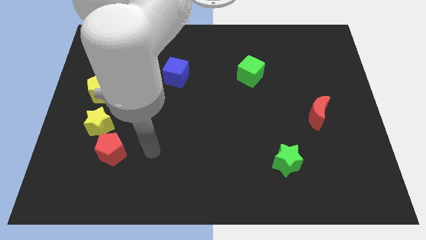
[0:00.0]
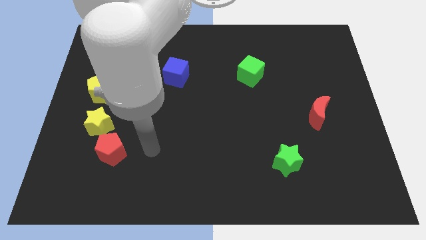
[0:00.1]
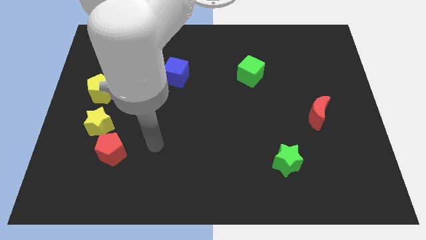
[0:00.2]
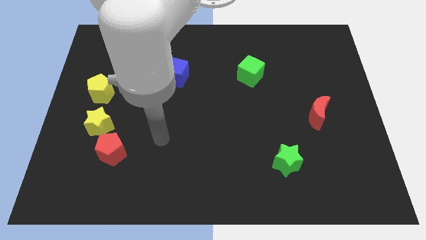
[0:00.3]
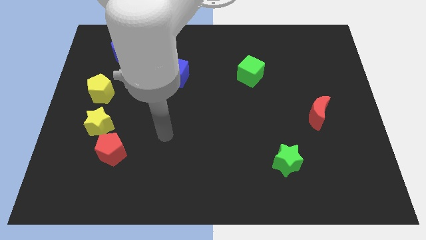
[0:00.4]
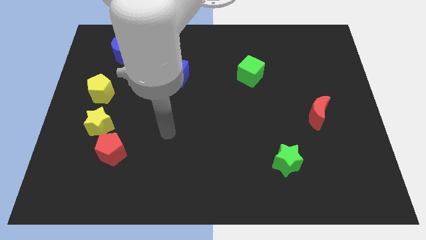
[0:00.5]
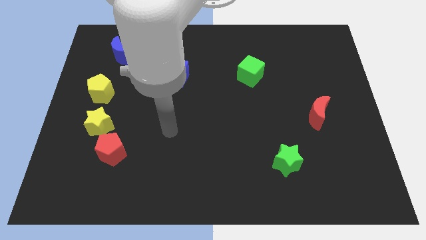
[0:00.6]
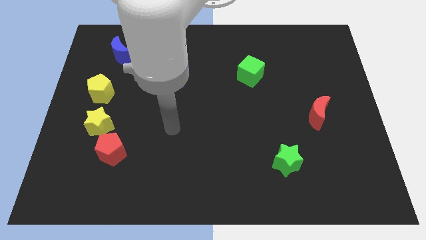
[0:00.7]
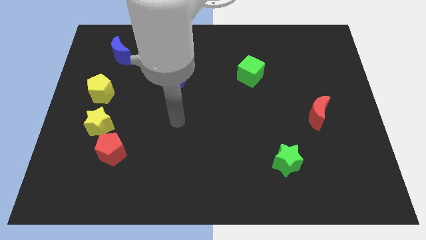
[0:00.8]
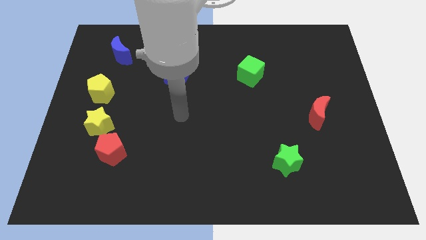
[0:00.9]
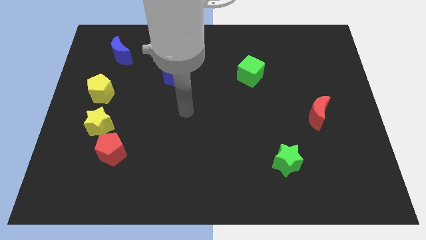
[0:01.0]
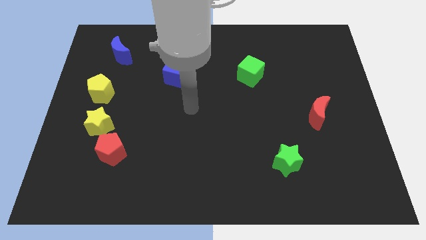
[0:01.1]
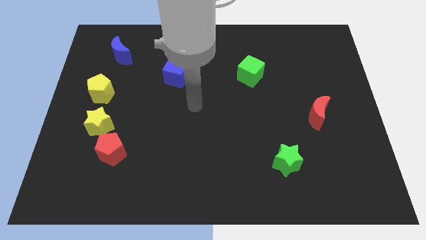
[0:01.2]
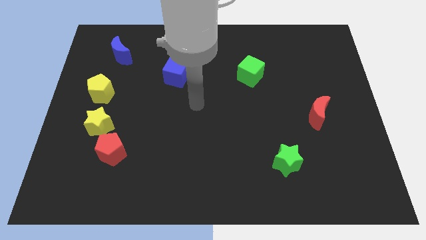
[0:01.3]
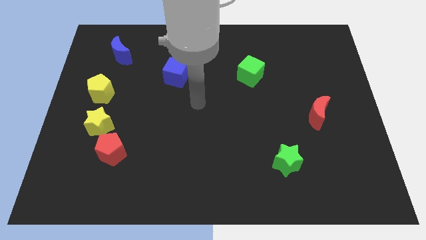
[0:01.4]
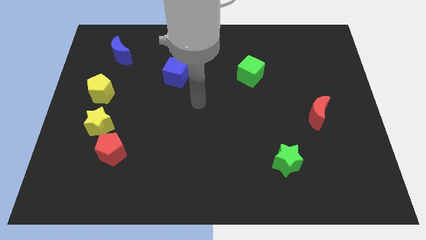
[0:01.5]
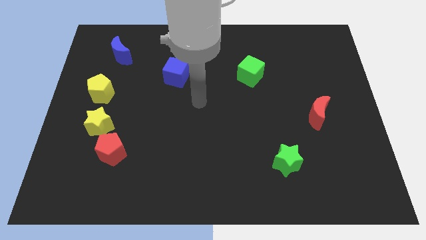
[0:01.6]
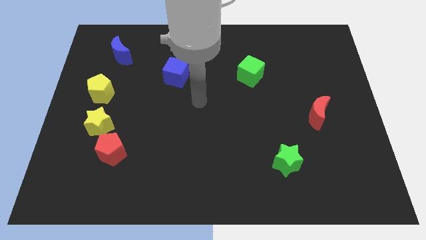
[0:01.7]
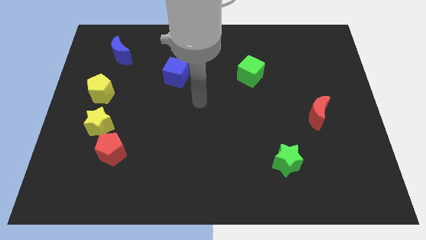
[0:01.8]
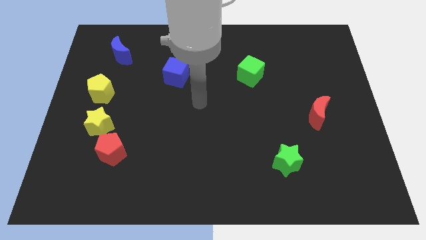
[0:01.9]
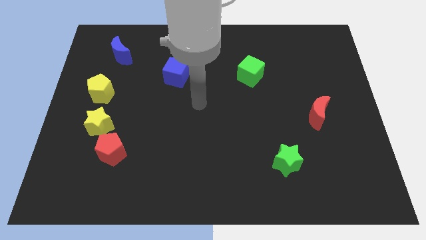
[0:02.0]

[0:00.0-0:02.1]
move away from the right side of the red pentagon

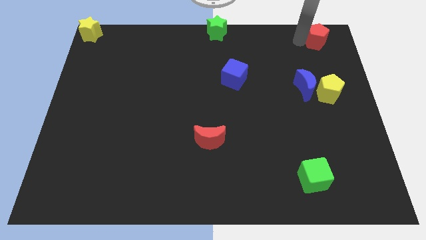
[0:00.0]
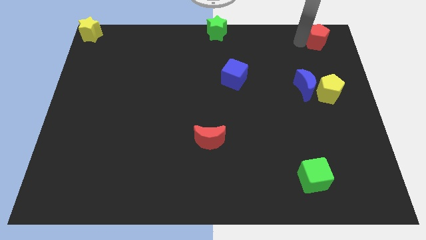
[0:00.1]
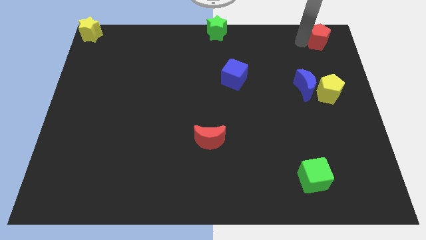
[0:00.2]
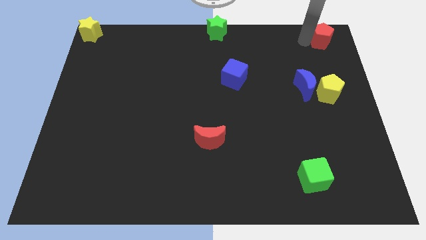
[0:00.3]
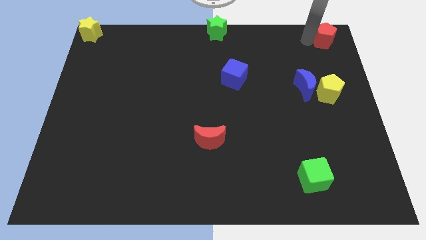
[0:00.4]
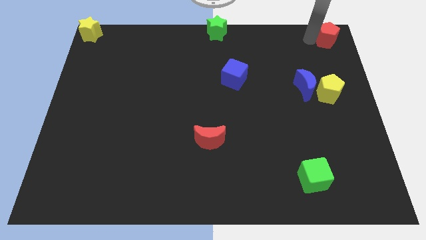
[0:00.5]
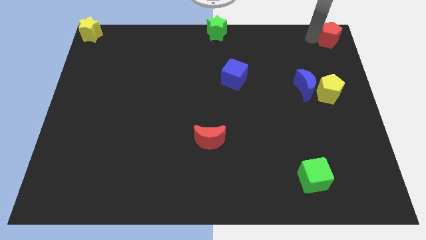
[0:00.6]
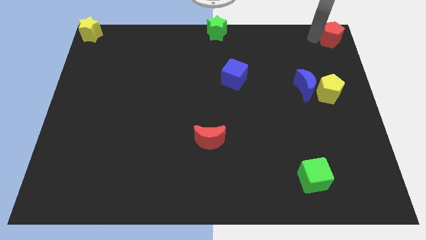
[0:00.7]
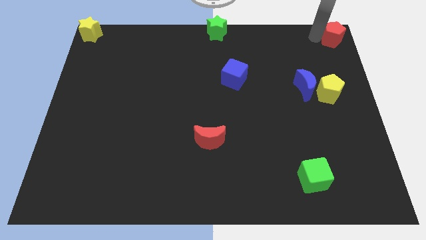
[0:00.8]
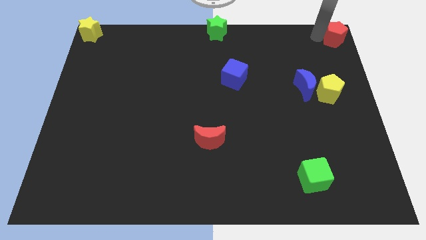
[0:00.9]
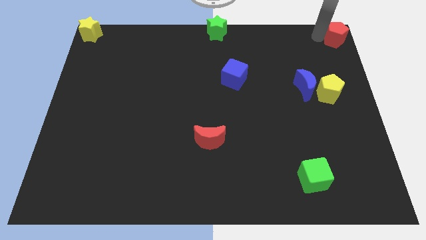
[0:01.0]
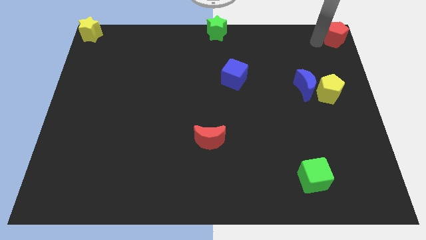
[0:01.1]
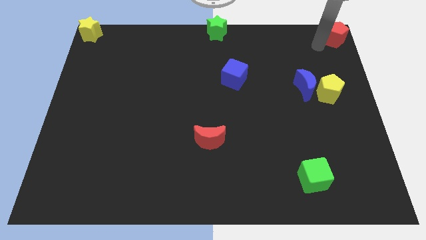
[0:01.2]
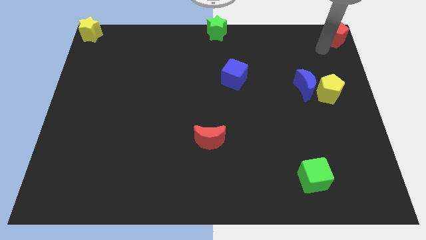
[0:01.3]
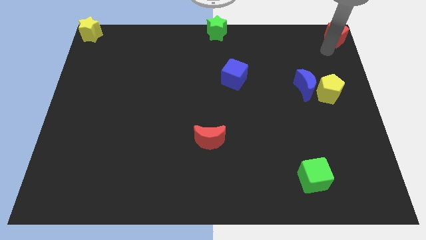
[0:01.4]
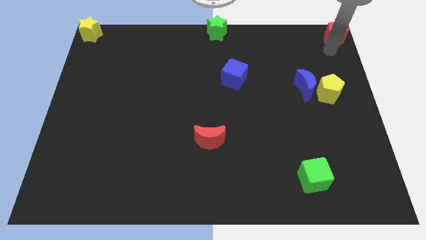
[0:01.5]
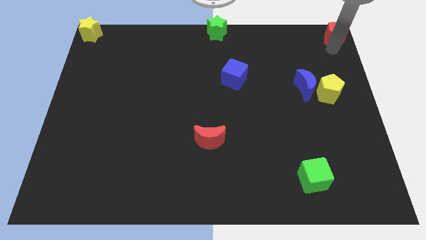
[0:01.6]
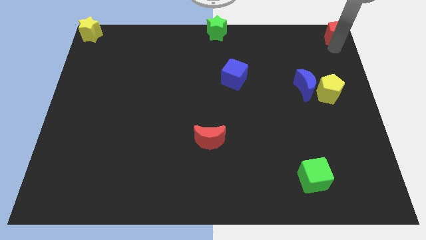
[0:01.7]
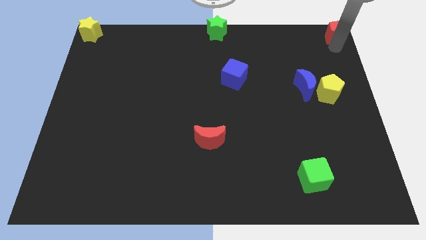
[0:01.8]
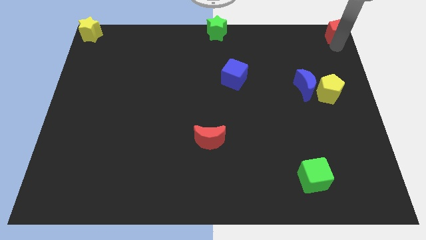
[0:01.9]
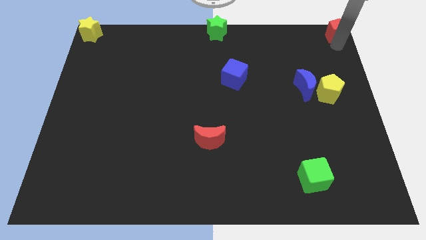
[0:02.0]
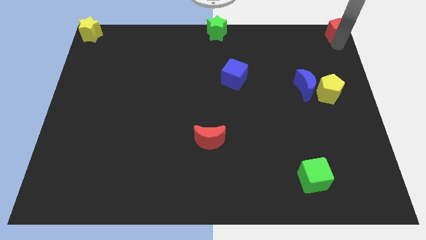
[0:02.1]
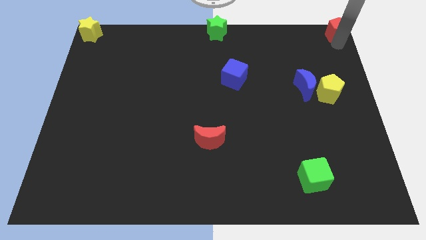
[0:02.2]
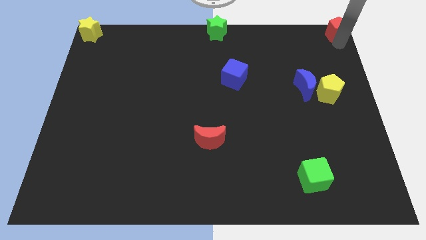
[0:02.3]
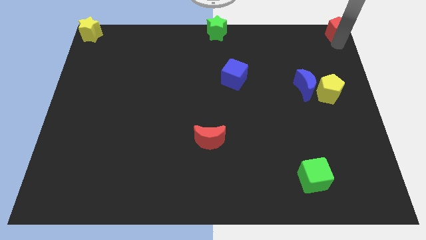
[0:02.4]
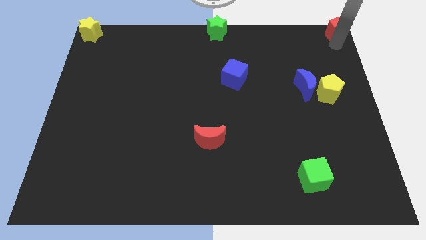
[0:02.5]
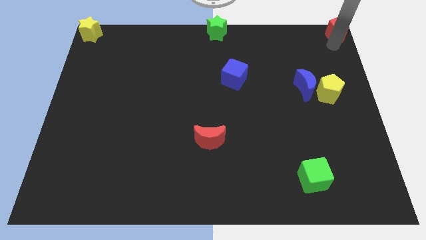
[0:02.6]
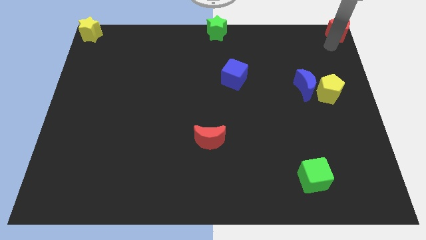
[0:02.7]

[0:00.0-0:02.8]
move the red pentagon to the top right corner of the board

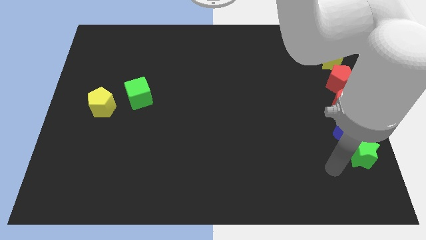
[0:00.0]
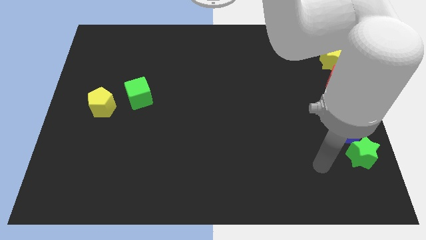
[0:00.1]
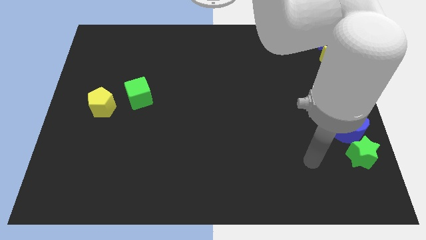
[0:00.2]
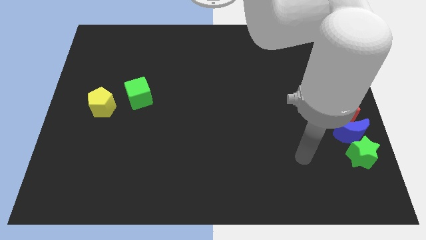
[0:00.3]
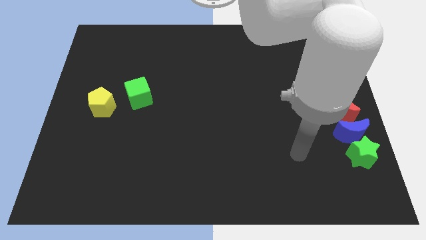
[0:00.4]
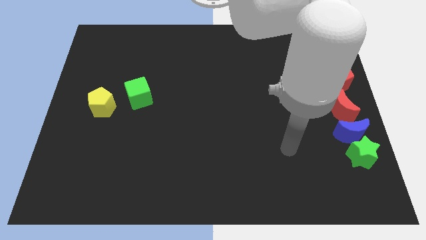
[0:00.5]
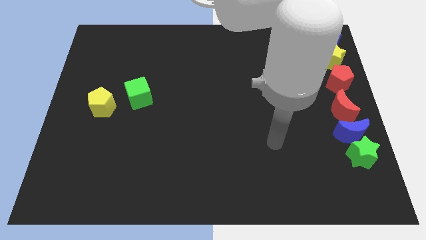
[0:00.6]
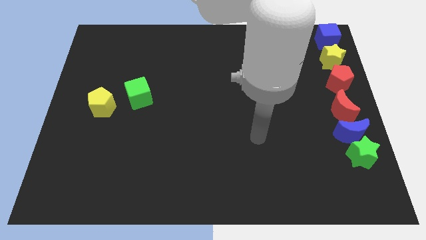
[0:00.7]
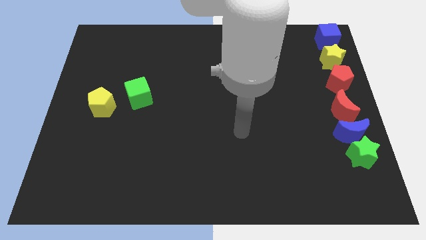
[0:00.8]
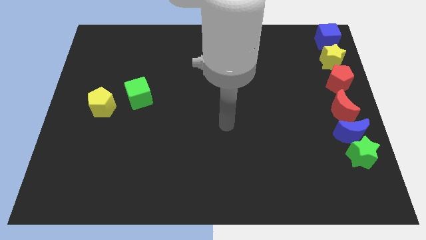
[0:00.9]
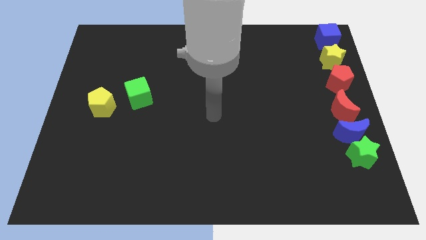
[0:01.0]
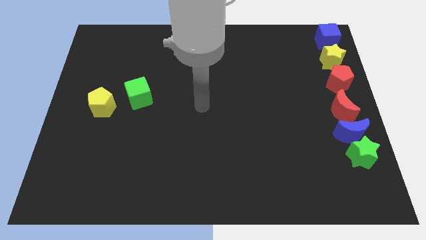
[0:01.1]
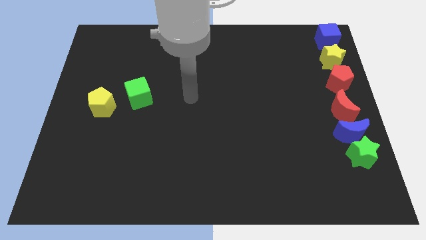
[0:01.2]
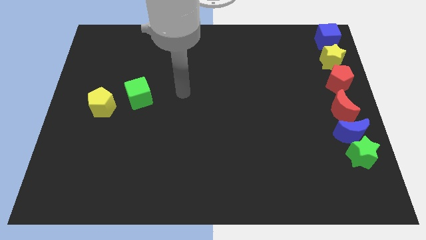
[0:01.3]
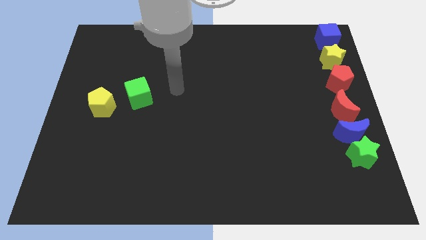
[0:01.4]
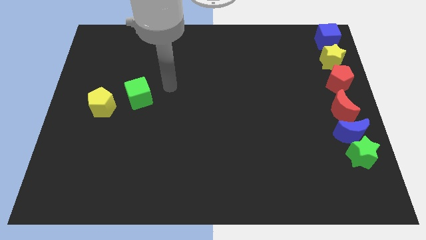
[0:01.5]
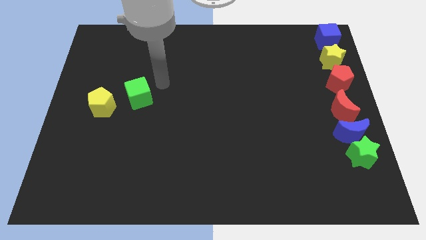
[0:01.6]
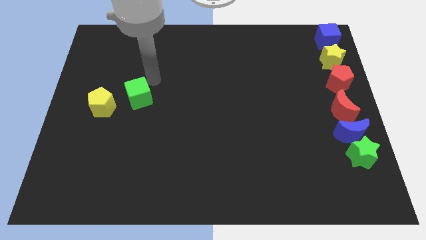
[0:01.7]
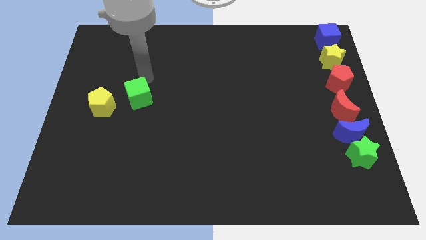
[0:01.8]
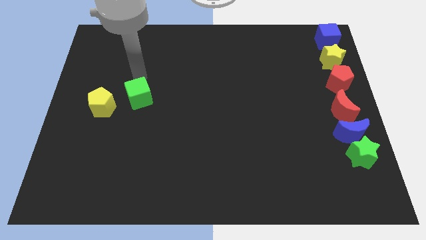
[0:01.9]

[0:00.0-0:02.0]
move your arm to the top of green cube

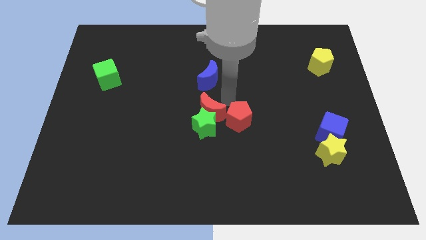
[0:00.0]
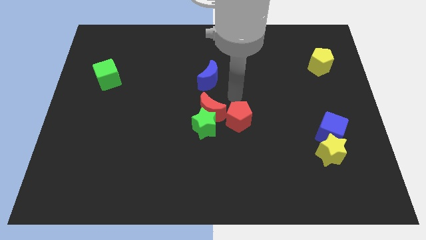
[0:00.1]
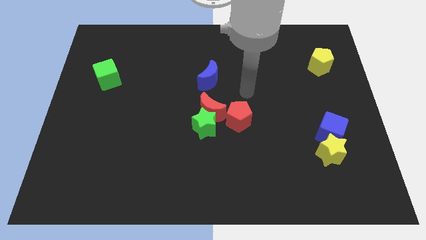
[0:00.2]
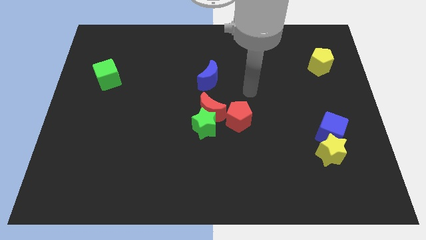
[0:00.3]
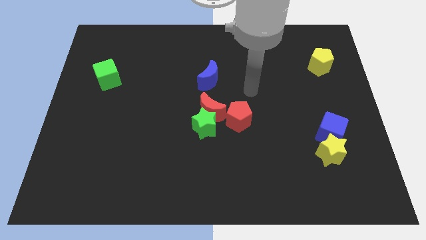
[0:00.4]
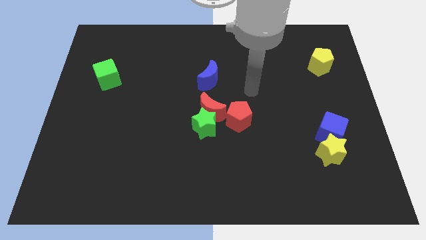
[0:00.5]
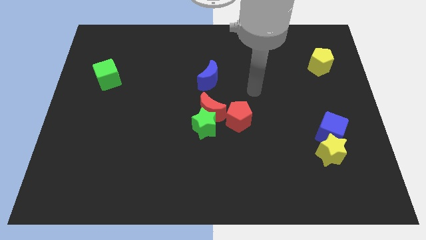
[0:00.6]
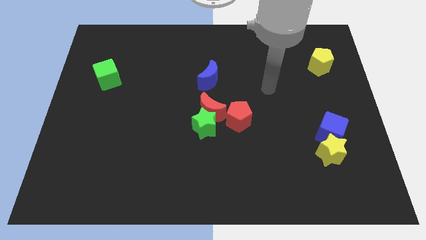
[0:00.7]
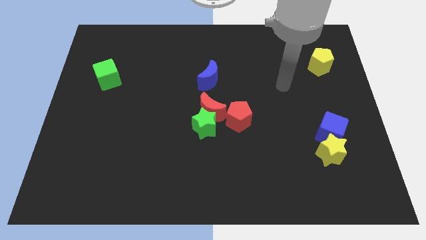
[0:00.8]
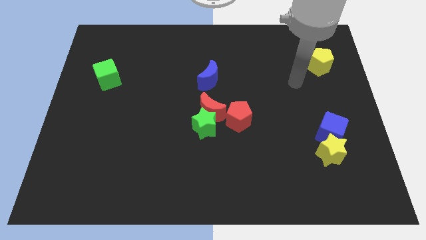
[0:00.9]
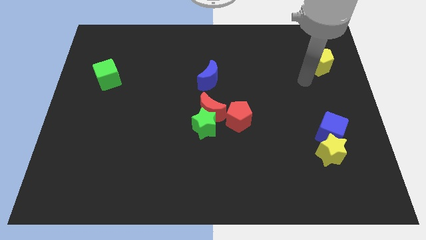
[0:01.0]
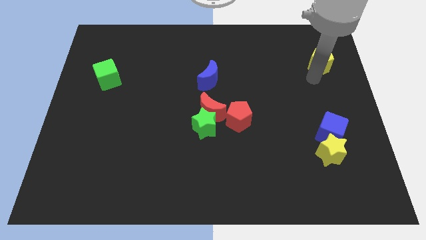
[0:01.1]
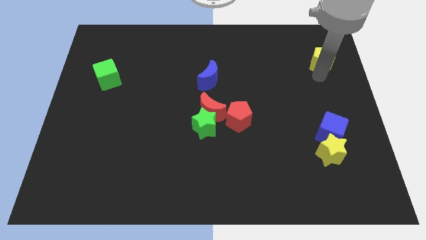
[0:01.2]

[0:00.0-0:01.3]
move the hand to the yellow pentagon

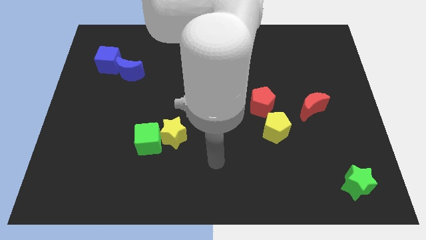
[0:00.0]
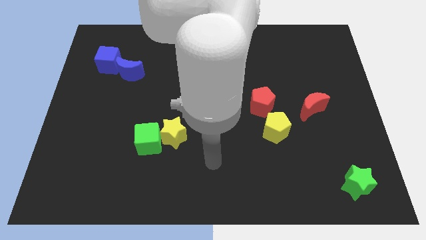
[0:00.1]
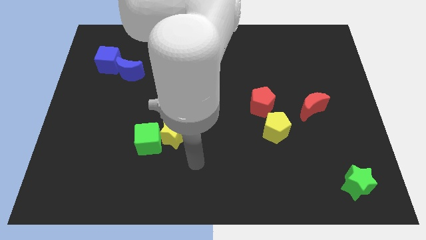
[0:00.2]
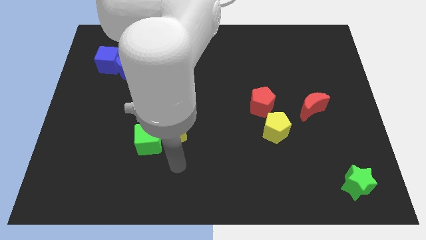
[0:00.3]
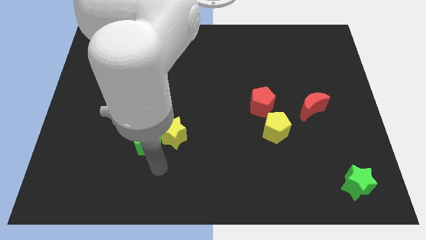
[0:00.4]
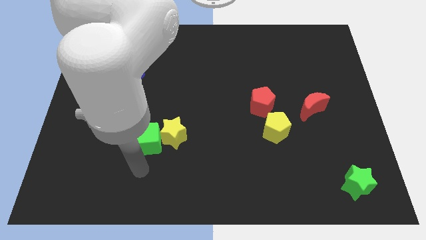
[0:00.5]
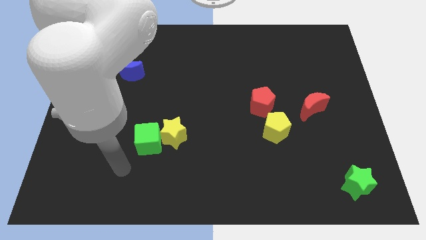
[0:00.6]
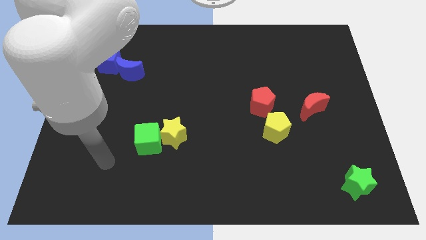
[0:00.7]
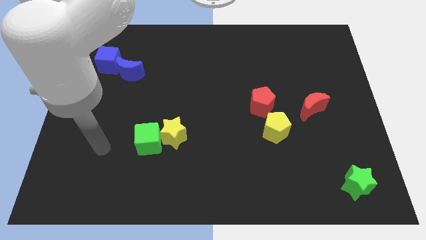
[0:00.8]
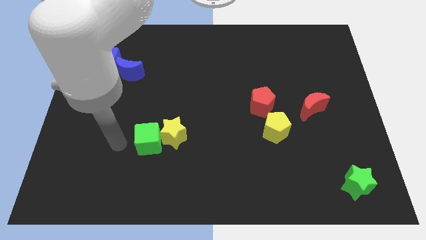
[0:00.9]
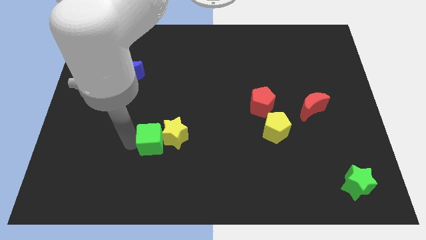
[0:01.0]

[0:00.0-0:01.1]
move your arm towards the left of the green cube
